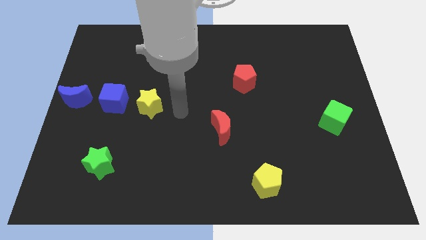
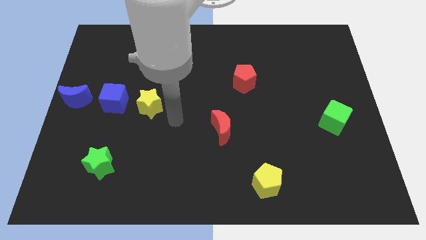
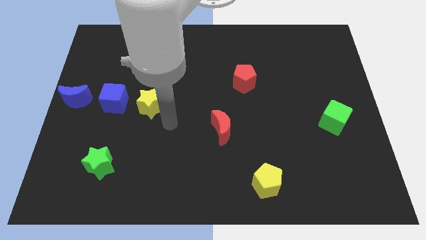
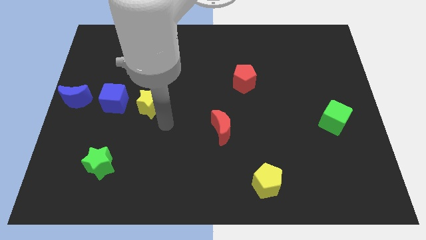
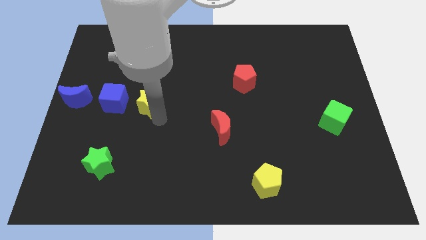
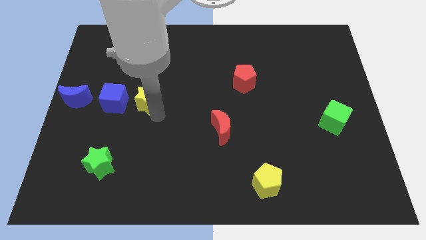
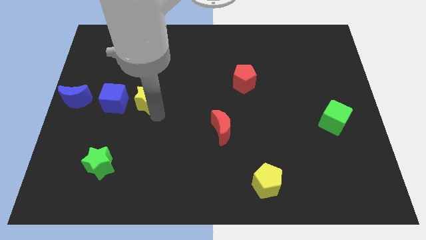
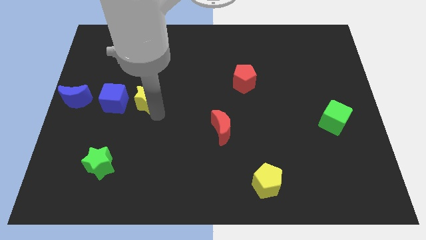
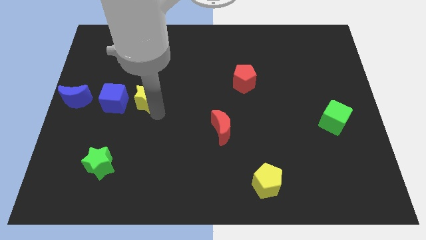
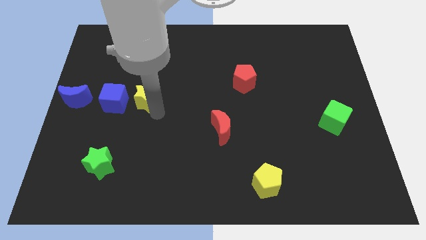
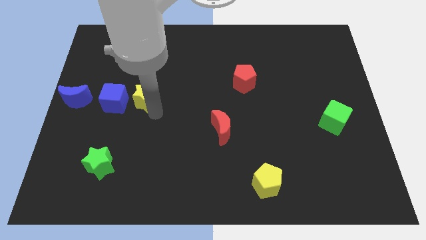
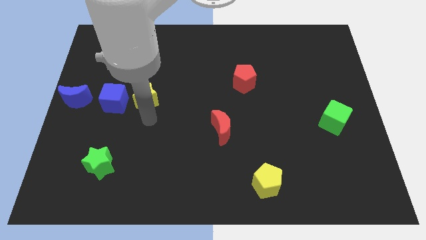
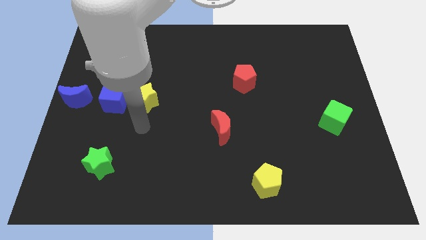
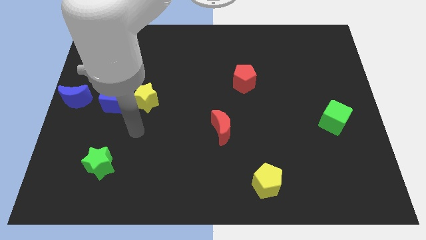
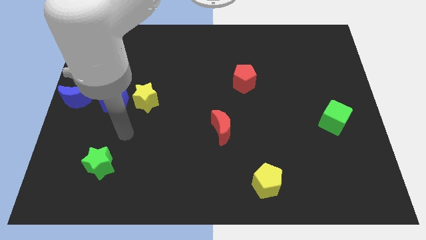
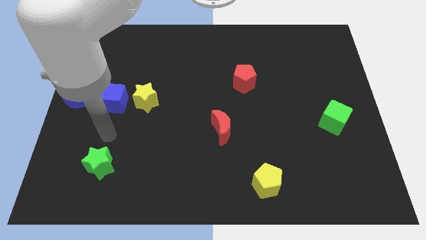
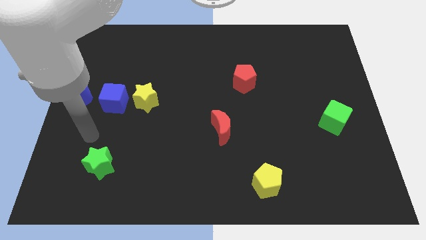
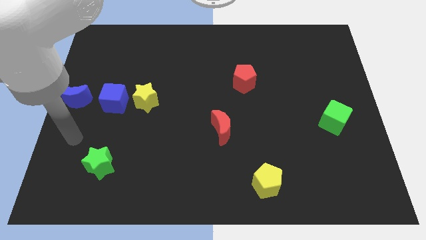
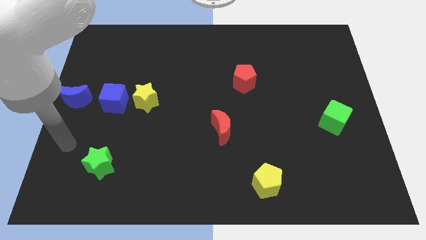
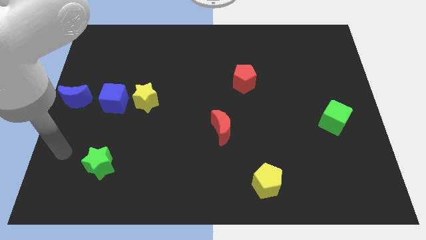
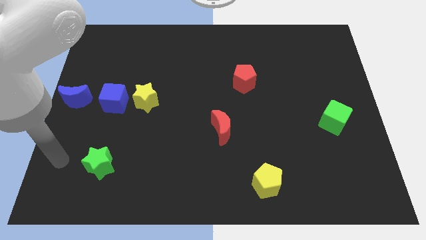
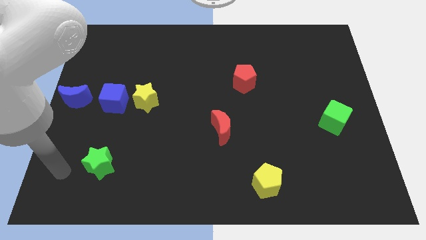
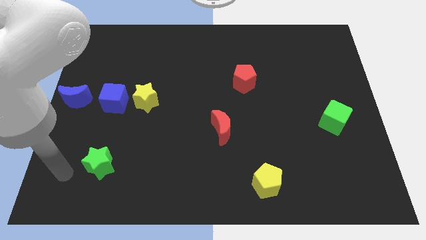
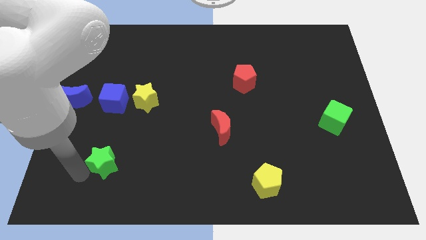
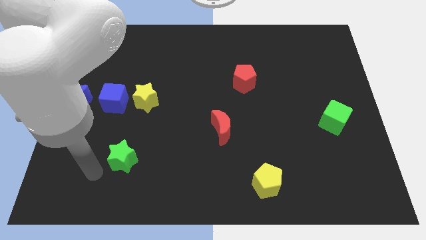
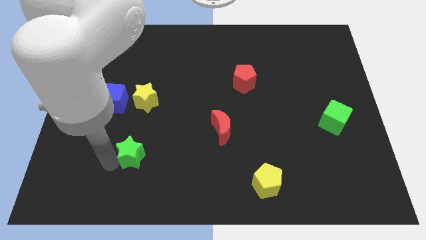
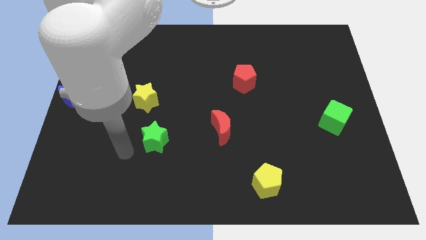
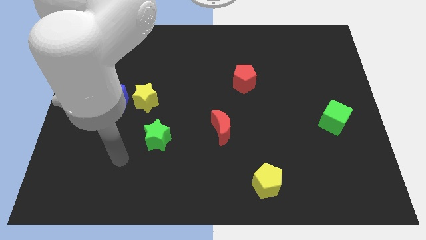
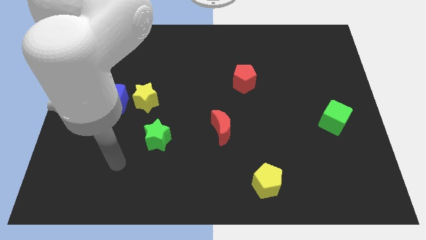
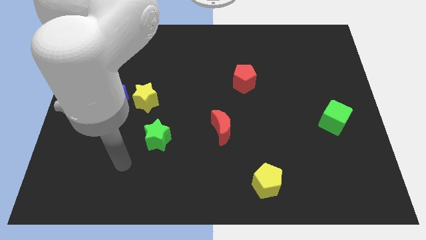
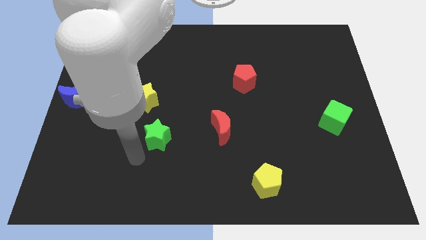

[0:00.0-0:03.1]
slightly push the greemn star towards the yellow star

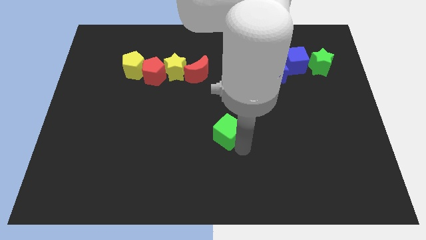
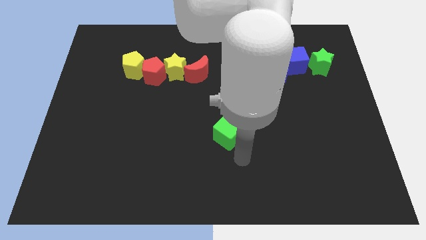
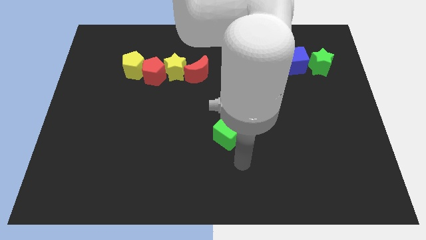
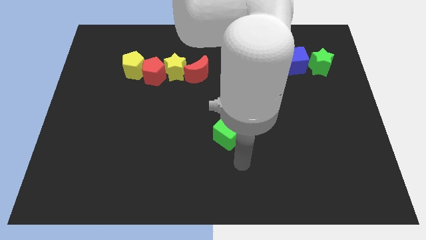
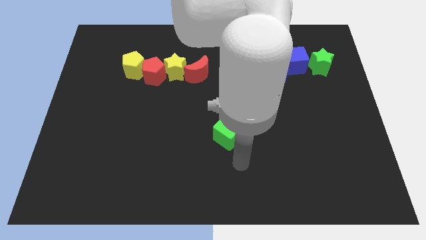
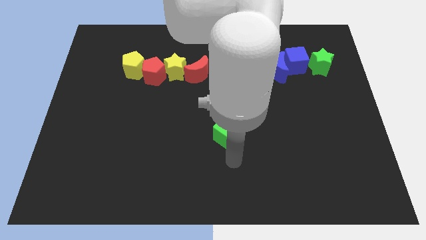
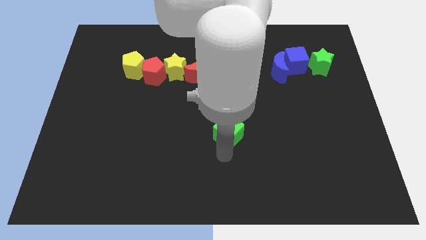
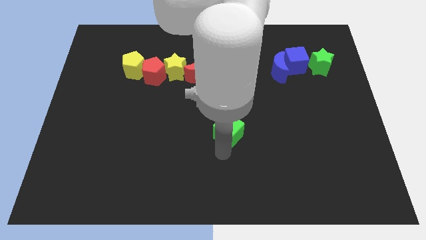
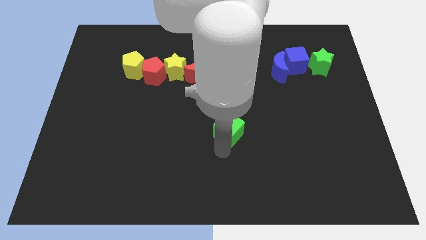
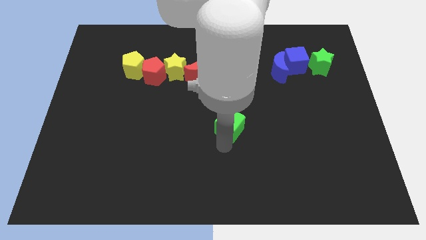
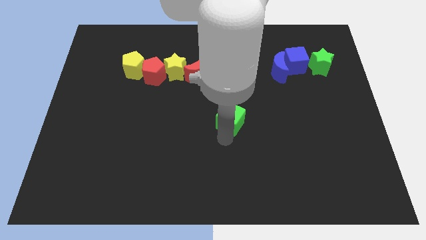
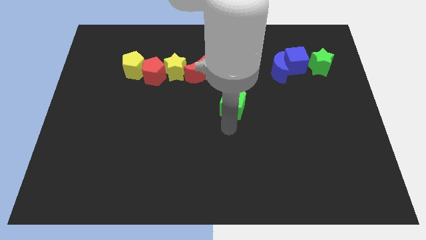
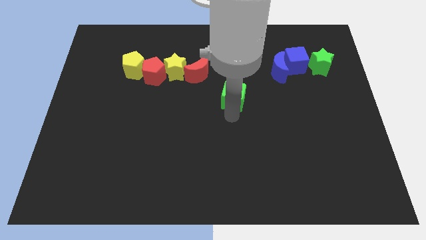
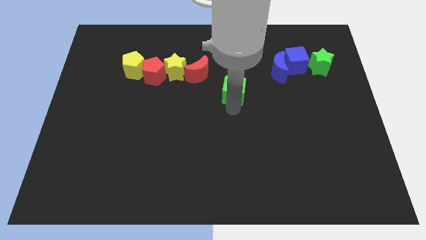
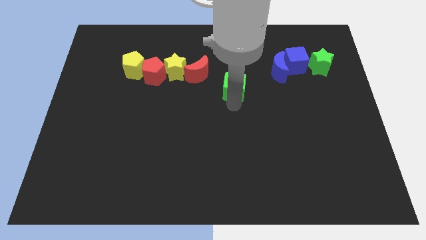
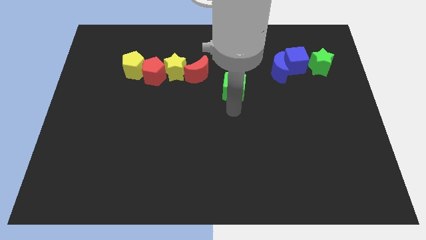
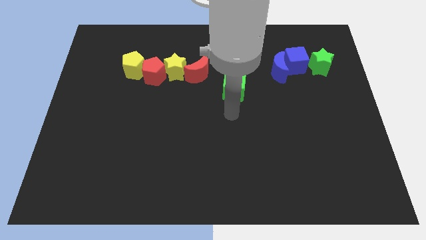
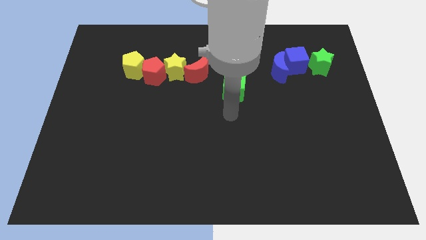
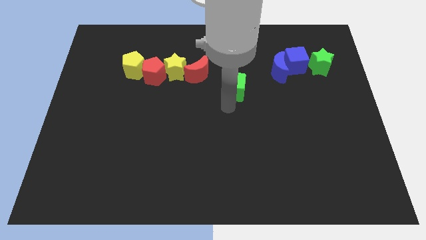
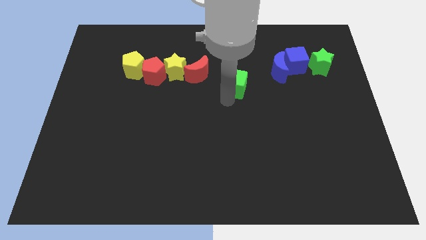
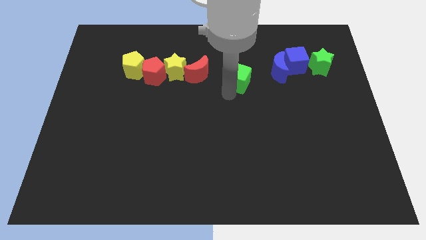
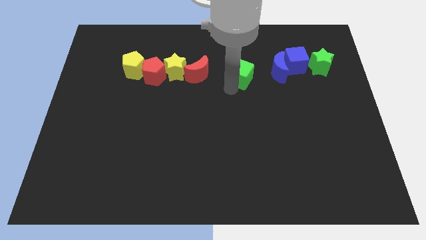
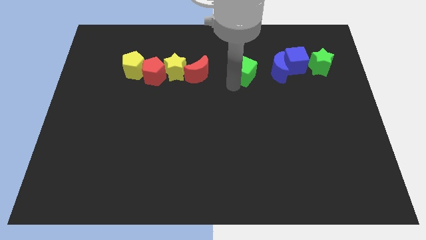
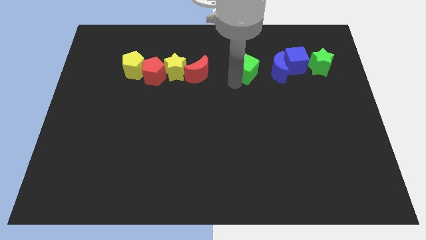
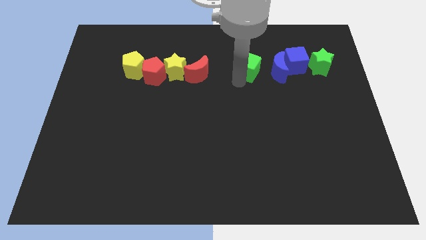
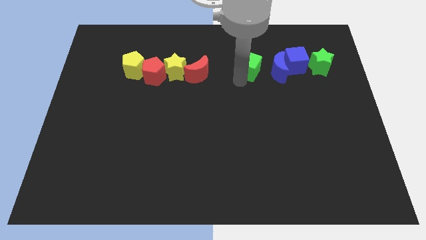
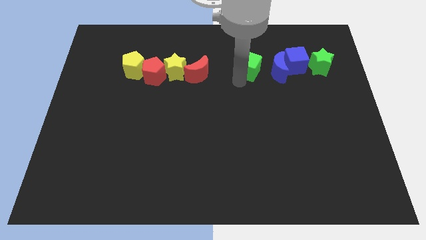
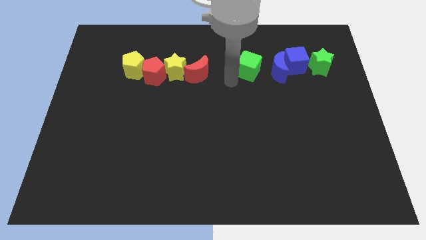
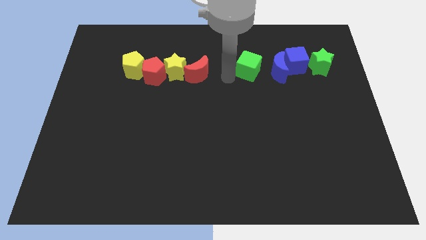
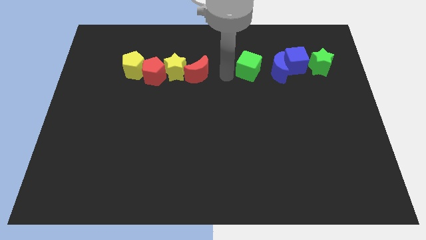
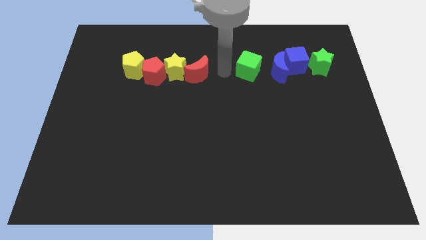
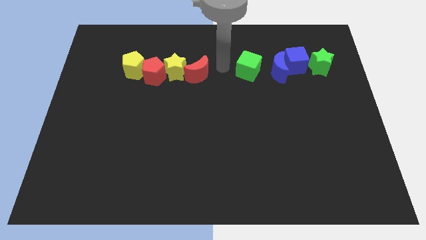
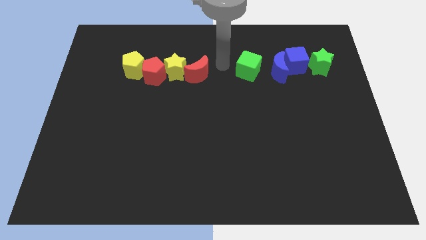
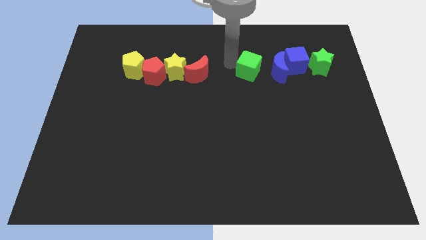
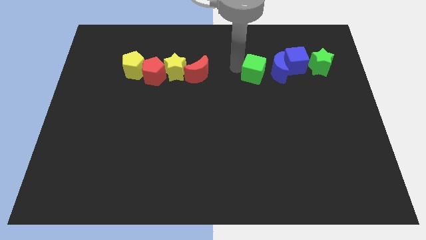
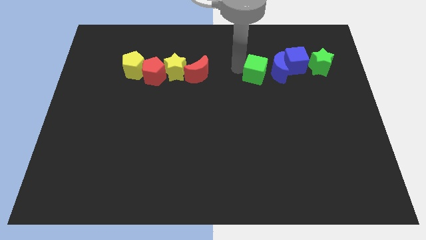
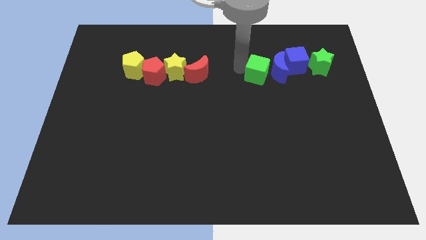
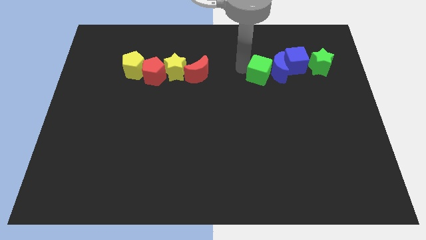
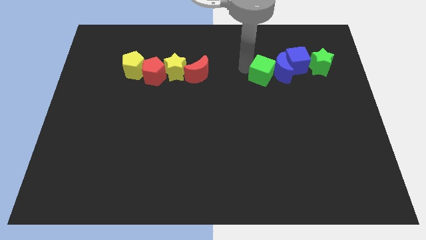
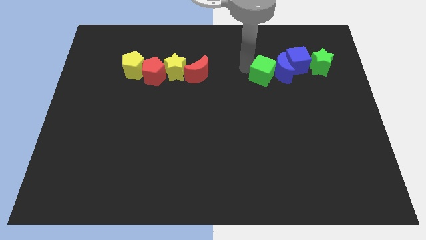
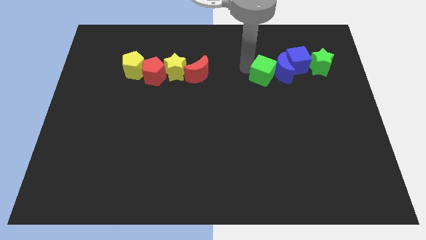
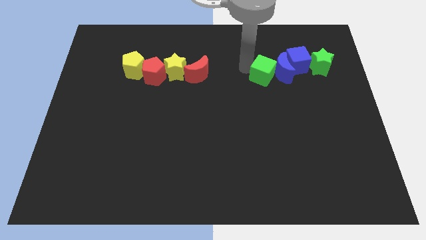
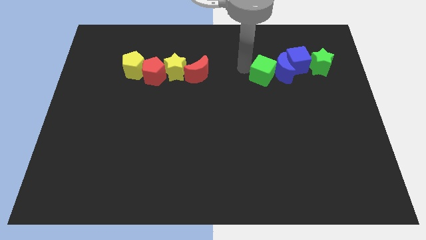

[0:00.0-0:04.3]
push the green cube into the blue moon

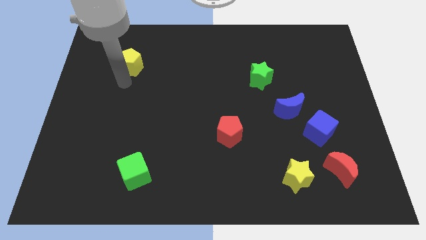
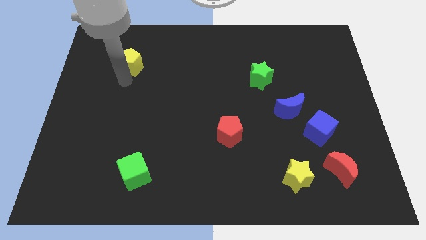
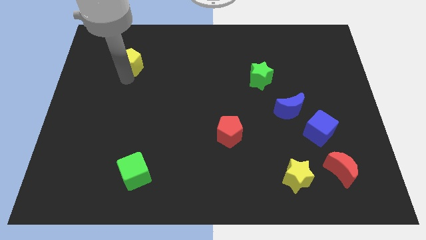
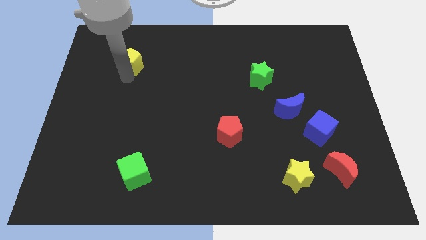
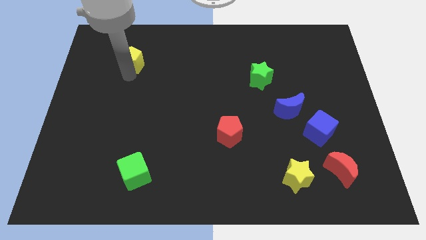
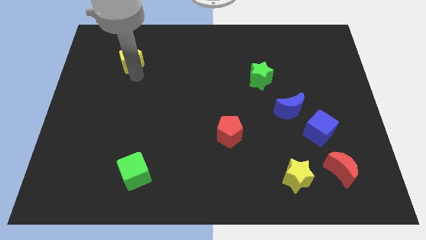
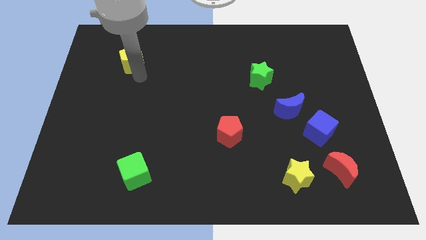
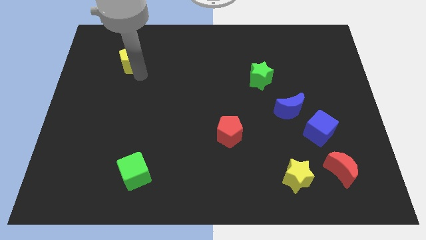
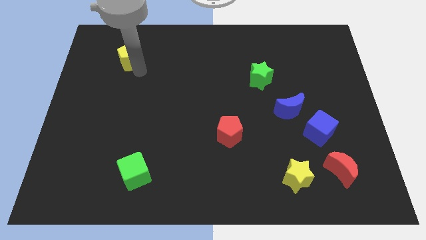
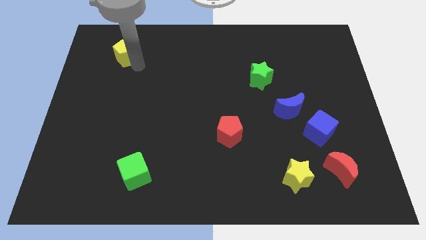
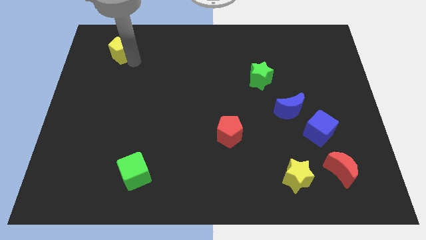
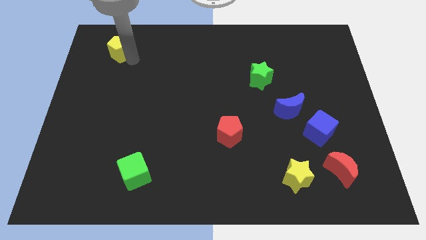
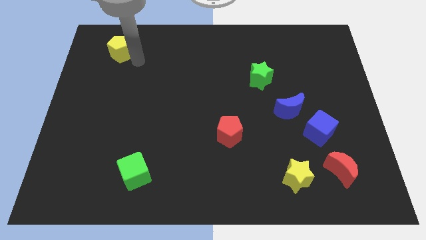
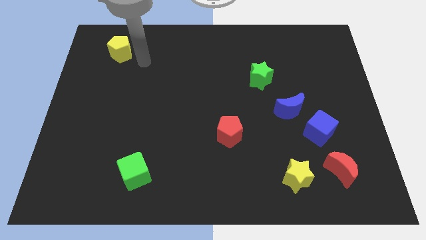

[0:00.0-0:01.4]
move the yellow pentagon up slightly
